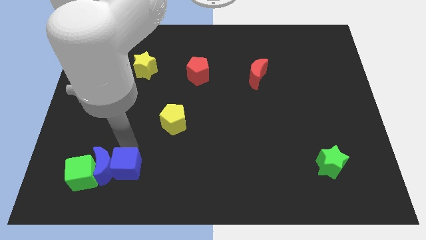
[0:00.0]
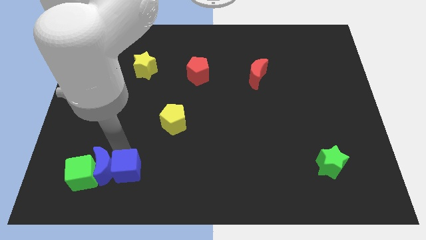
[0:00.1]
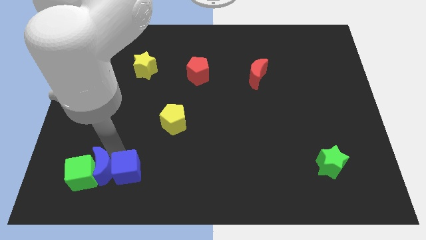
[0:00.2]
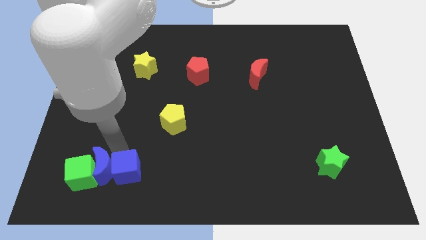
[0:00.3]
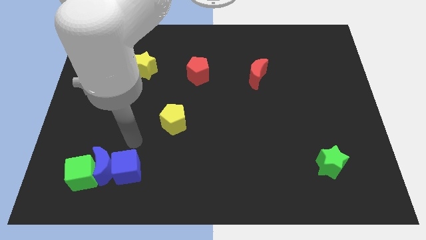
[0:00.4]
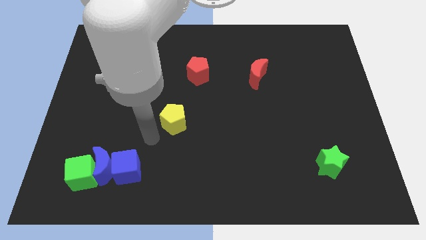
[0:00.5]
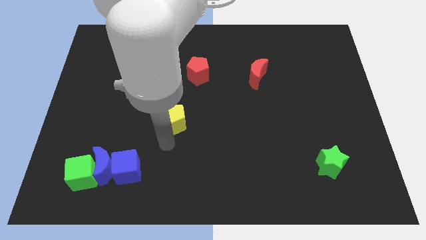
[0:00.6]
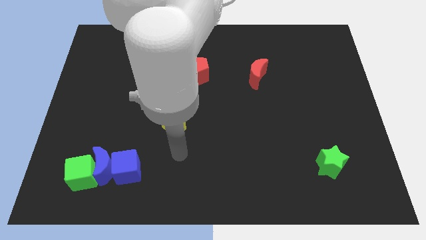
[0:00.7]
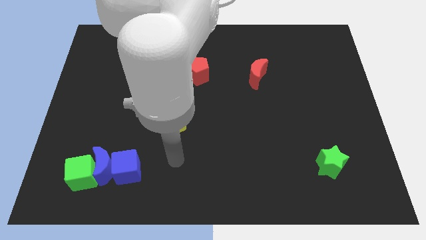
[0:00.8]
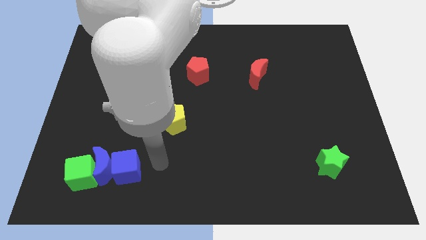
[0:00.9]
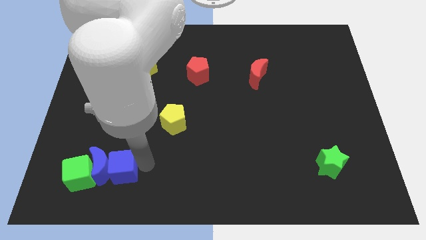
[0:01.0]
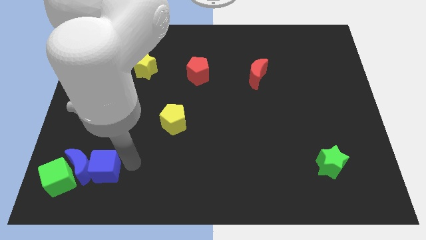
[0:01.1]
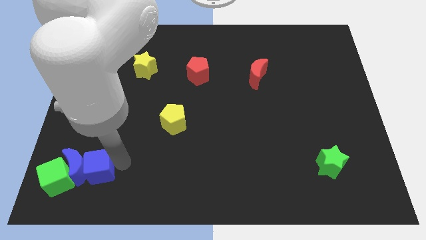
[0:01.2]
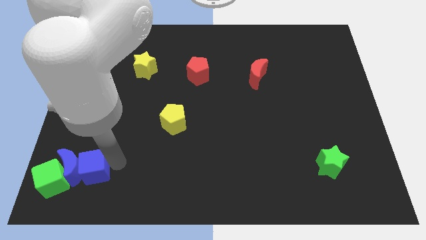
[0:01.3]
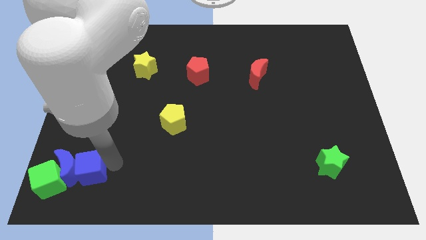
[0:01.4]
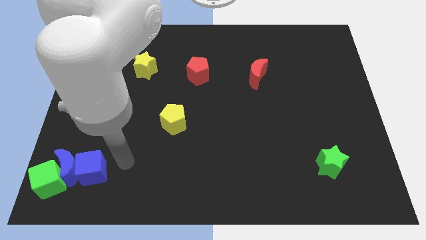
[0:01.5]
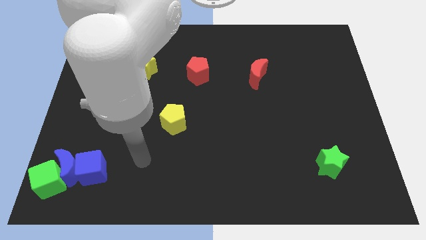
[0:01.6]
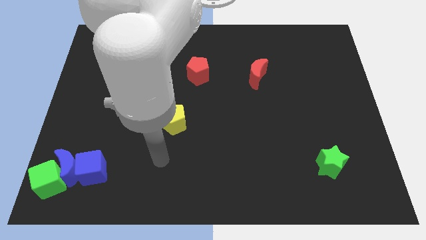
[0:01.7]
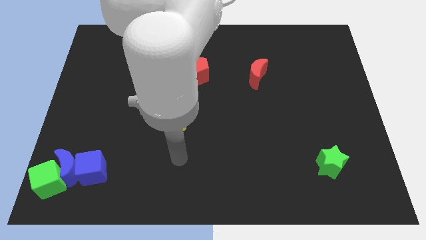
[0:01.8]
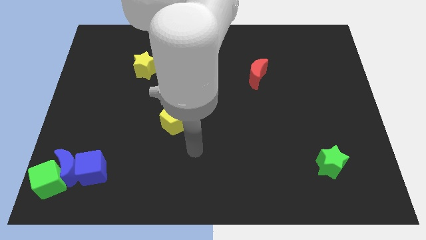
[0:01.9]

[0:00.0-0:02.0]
place the blue blocks and green cube at the bottom left side of the board

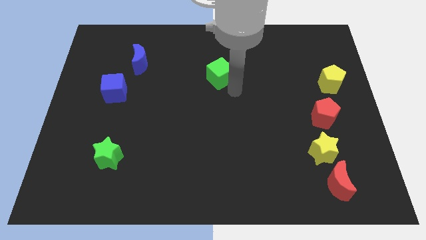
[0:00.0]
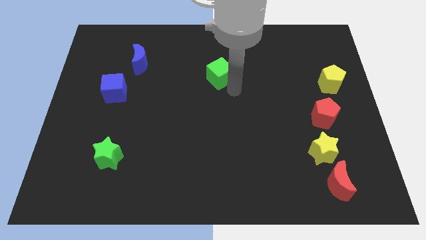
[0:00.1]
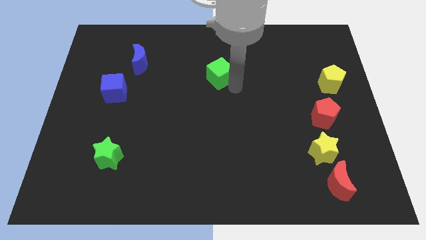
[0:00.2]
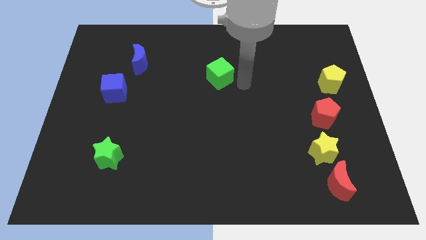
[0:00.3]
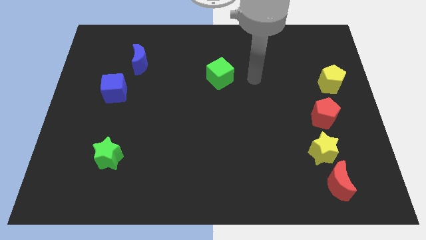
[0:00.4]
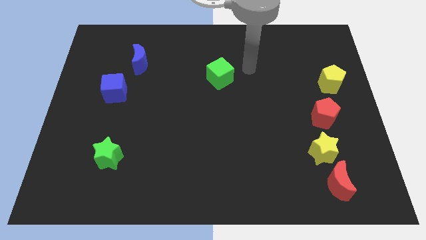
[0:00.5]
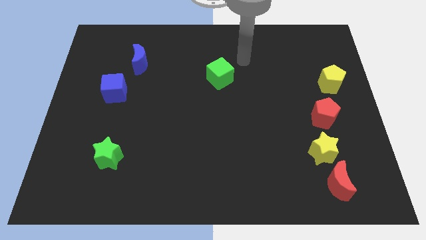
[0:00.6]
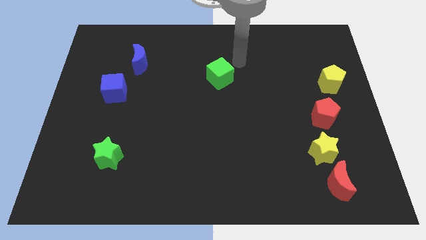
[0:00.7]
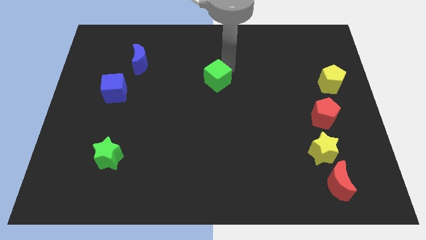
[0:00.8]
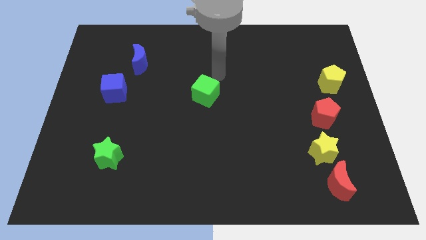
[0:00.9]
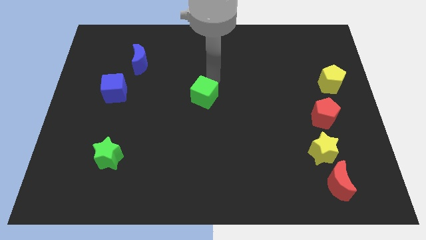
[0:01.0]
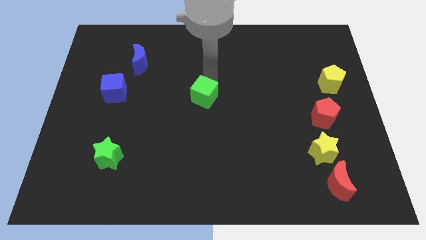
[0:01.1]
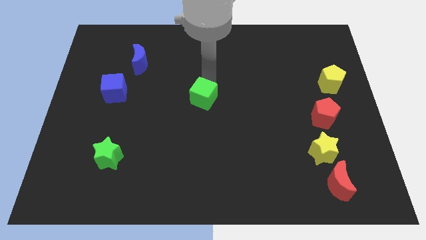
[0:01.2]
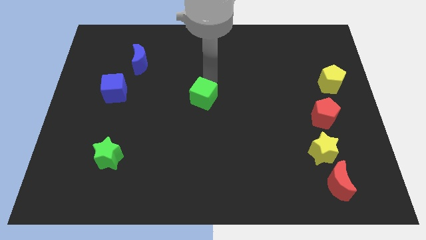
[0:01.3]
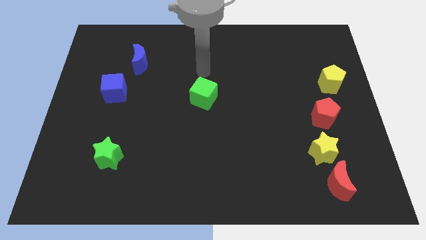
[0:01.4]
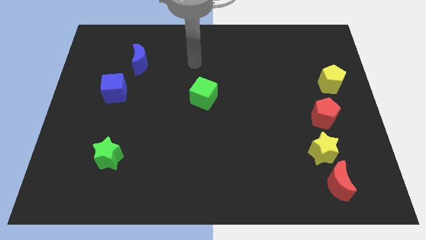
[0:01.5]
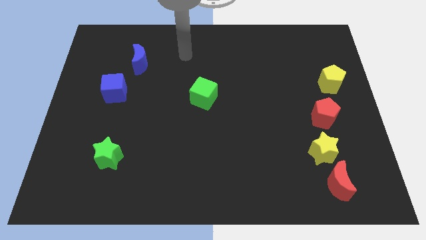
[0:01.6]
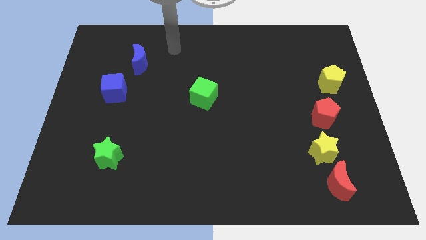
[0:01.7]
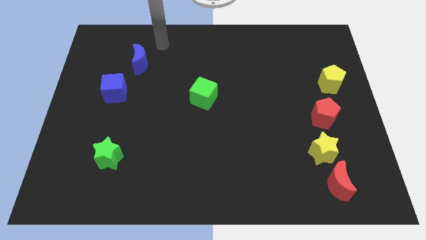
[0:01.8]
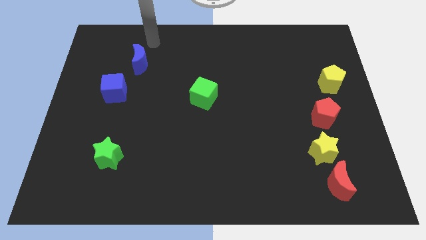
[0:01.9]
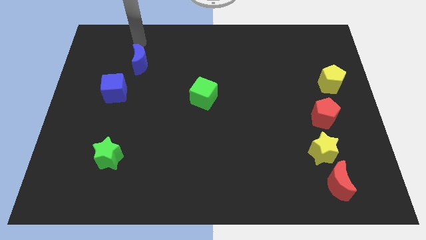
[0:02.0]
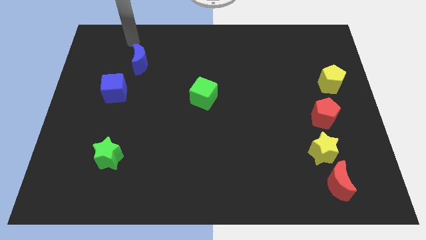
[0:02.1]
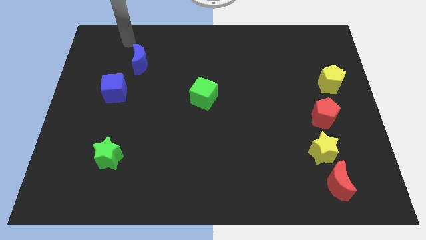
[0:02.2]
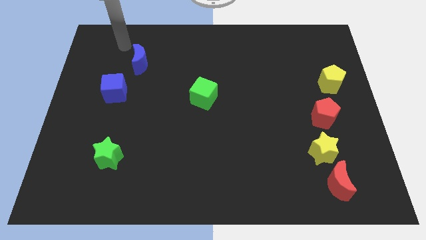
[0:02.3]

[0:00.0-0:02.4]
put the green cube to the bottom

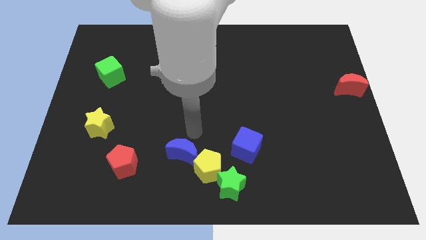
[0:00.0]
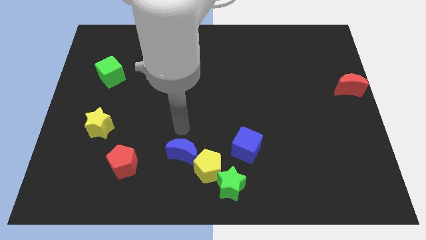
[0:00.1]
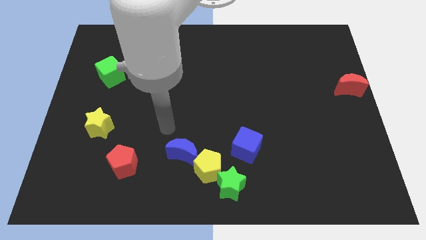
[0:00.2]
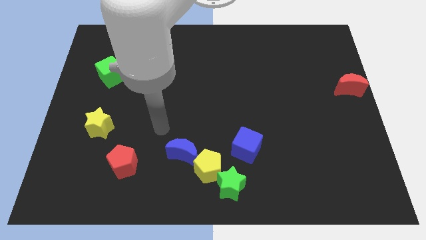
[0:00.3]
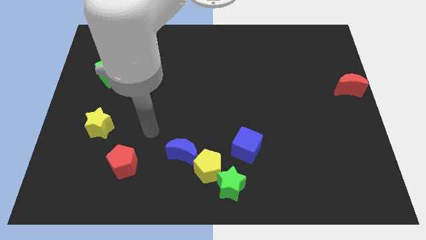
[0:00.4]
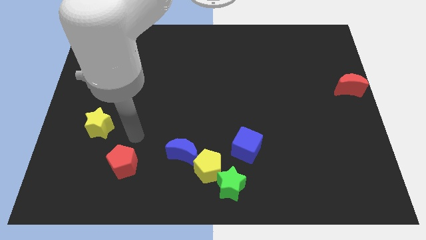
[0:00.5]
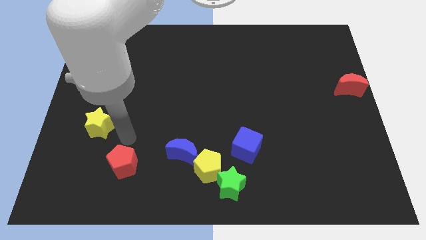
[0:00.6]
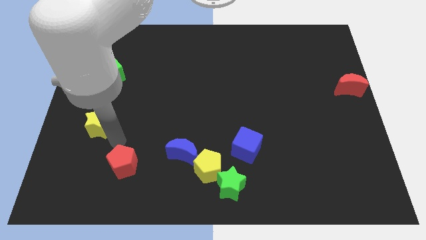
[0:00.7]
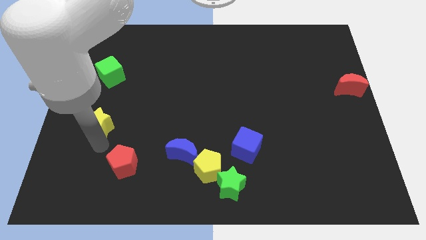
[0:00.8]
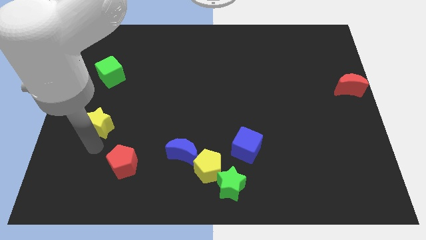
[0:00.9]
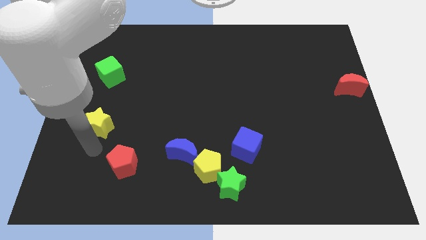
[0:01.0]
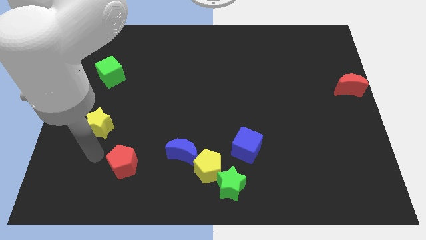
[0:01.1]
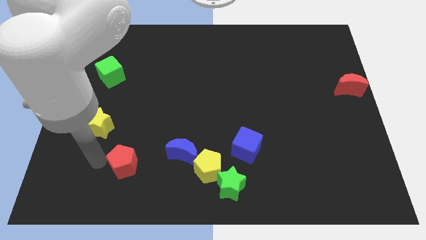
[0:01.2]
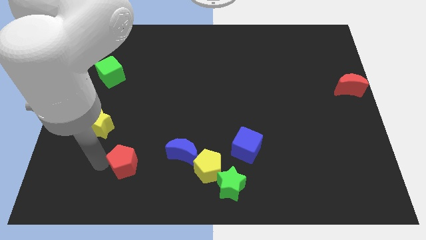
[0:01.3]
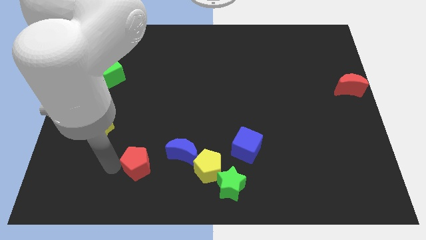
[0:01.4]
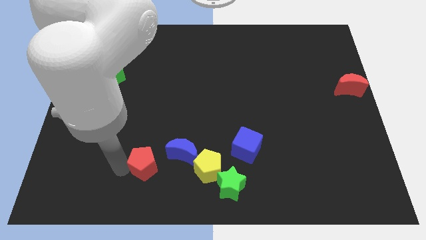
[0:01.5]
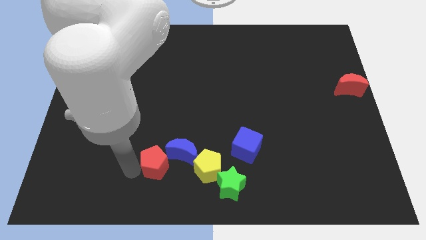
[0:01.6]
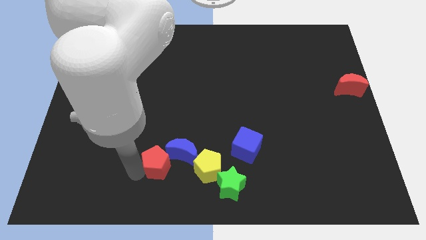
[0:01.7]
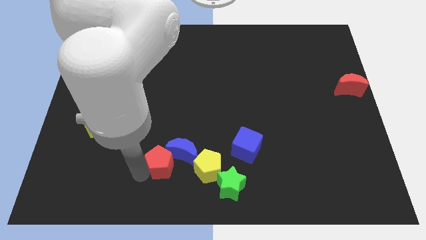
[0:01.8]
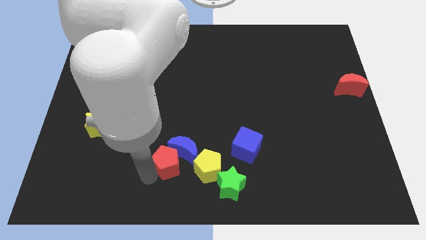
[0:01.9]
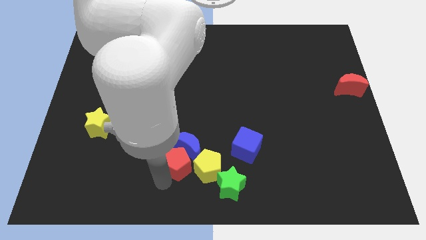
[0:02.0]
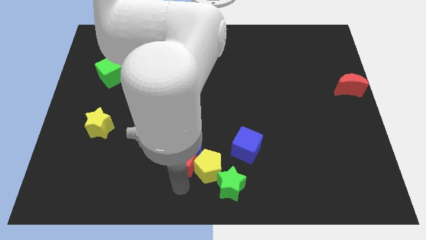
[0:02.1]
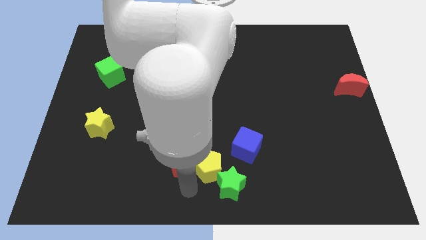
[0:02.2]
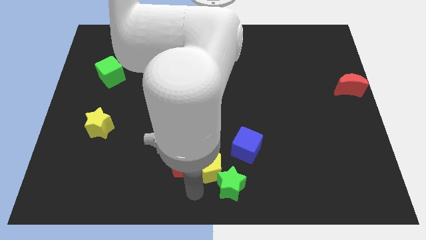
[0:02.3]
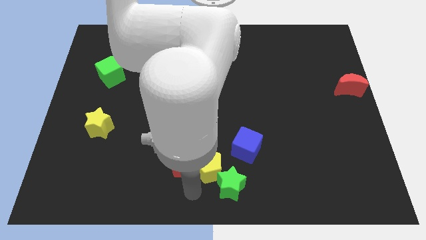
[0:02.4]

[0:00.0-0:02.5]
move the red pentagon to the bottom of the blue crescent

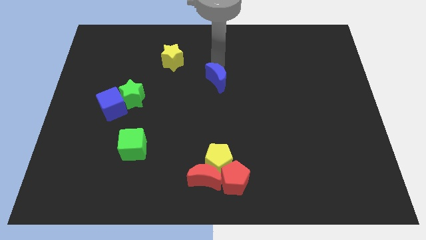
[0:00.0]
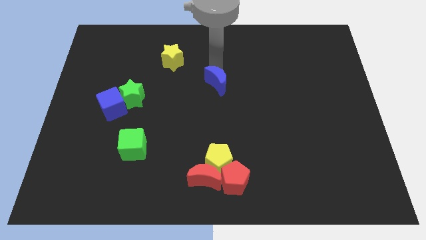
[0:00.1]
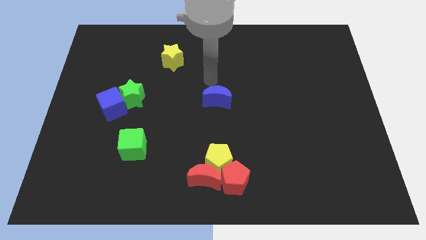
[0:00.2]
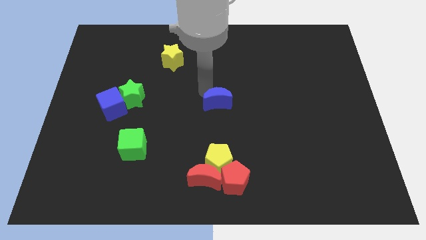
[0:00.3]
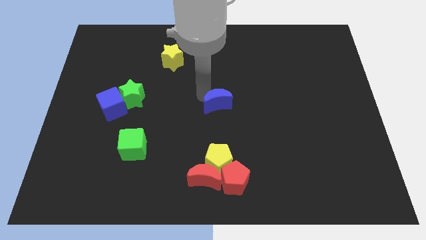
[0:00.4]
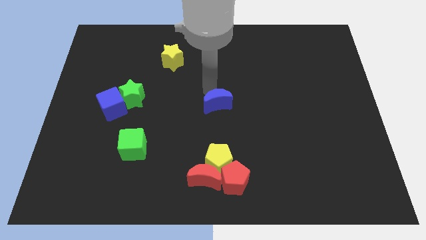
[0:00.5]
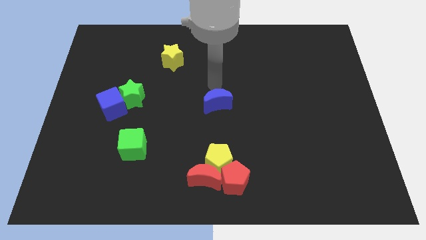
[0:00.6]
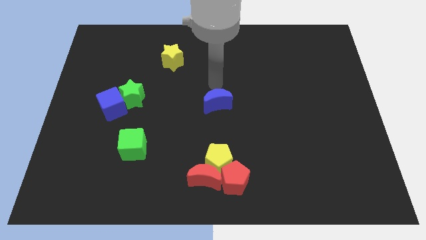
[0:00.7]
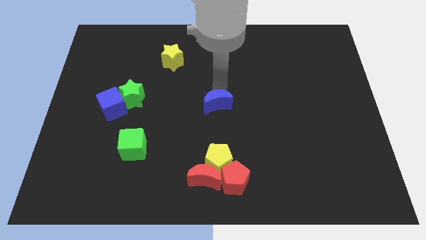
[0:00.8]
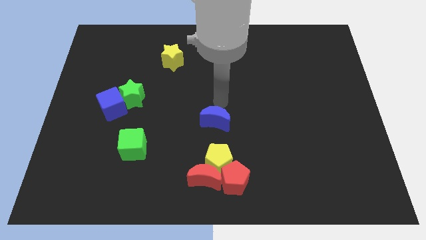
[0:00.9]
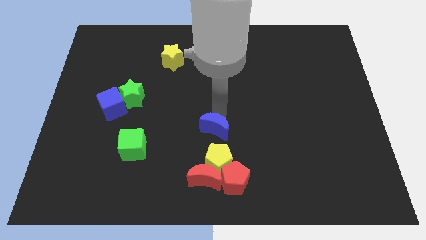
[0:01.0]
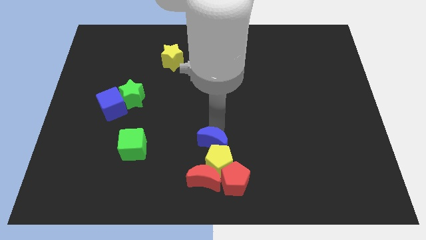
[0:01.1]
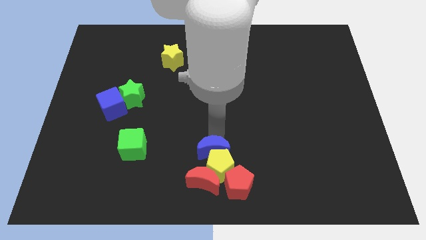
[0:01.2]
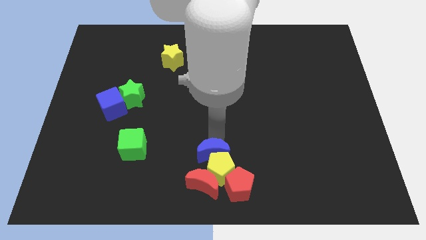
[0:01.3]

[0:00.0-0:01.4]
push the blue crescent into the yellow pentagon

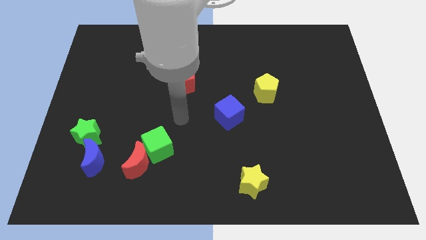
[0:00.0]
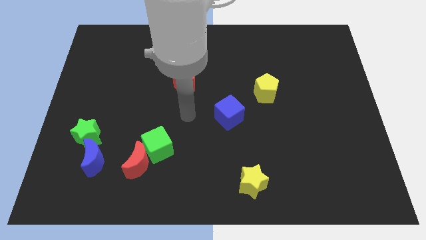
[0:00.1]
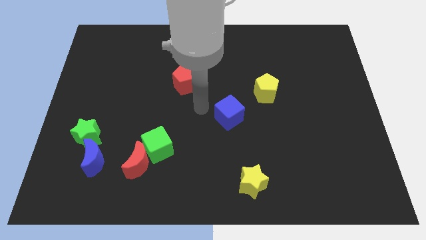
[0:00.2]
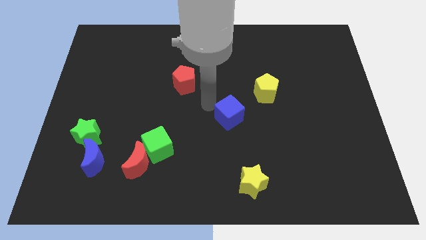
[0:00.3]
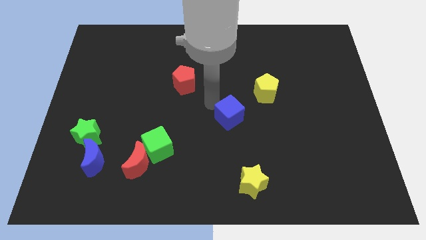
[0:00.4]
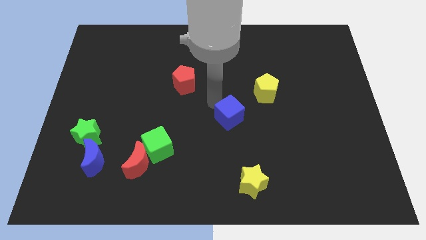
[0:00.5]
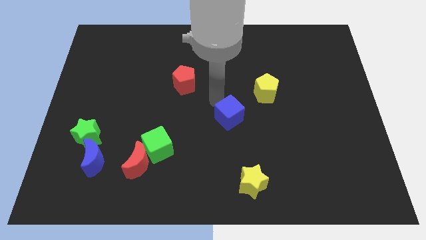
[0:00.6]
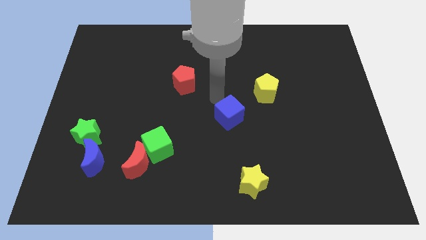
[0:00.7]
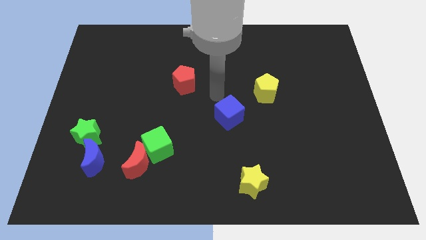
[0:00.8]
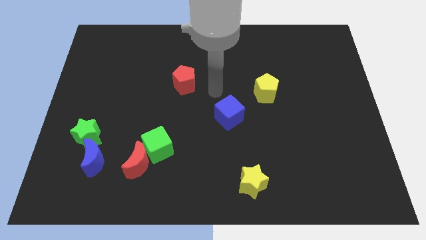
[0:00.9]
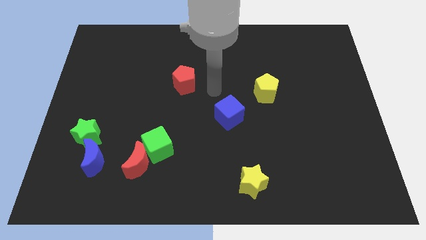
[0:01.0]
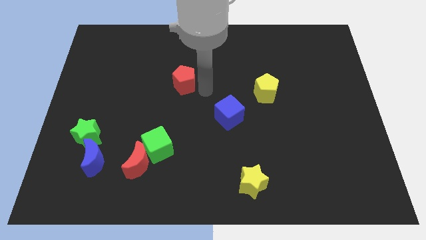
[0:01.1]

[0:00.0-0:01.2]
place your hand in between the red pentagon and the blue cube
